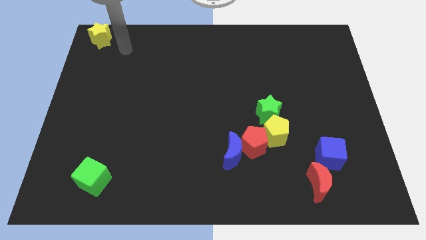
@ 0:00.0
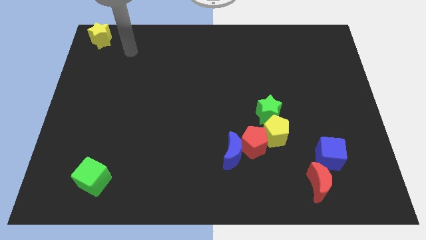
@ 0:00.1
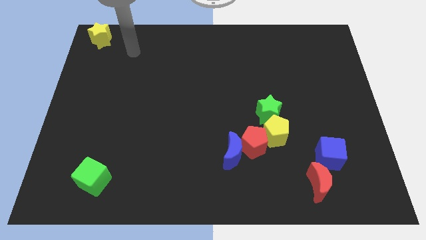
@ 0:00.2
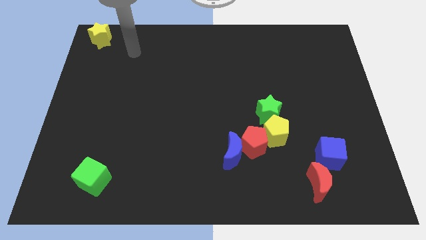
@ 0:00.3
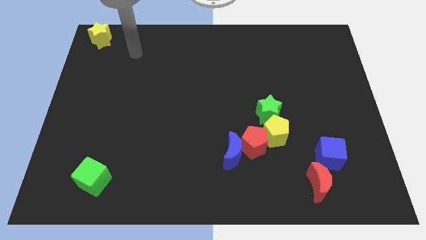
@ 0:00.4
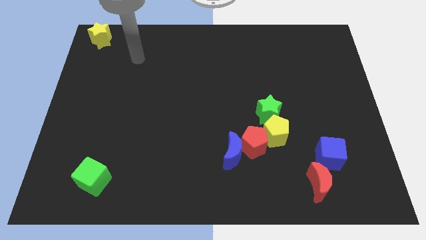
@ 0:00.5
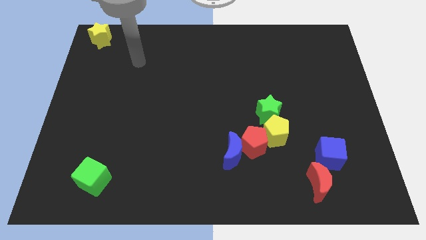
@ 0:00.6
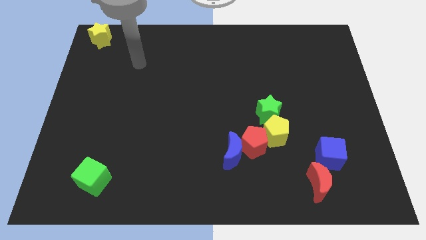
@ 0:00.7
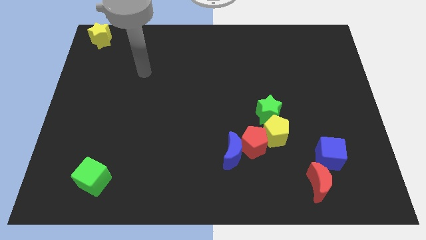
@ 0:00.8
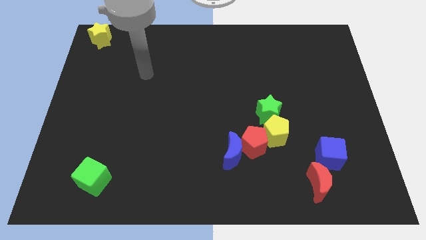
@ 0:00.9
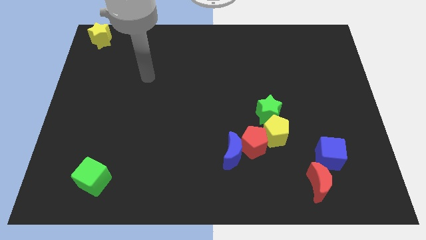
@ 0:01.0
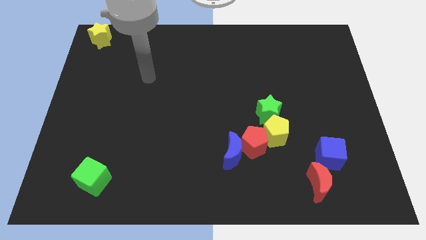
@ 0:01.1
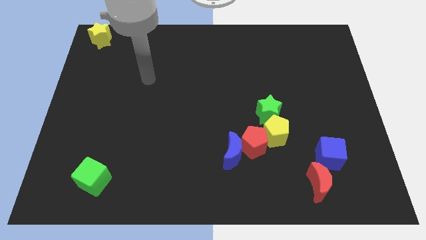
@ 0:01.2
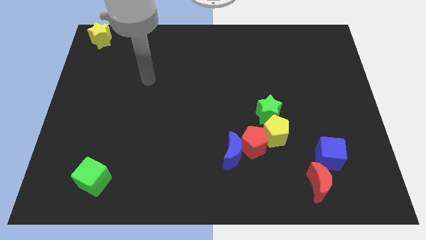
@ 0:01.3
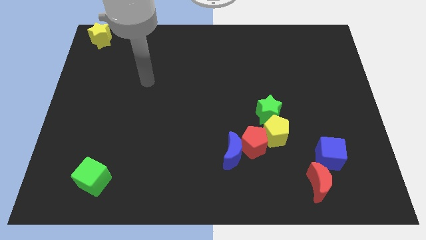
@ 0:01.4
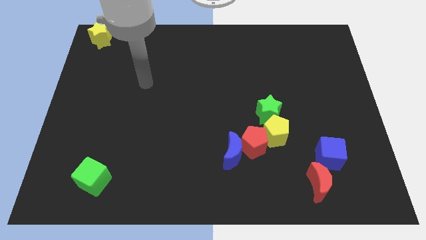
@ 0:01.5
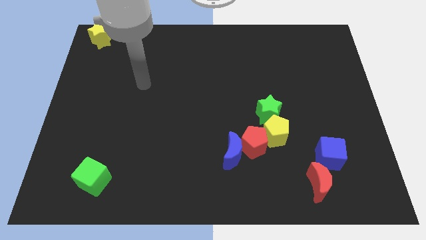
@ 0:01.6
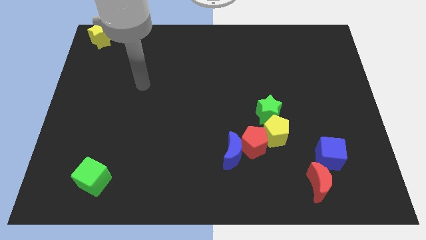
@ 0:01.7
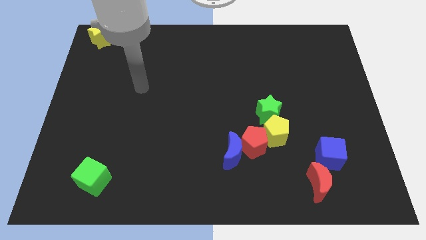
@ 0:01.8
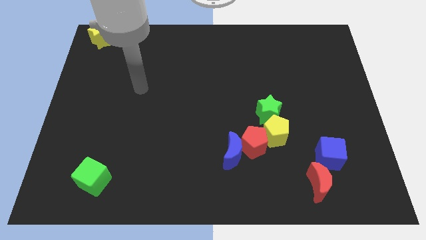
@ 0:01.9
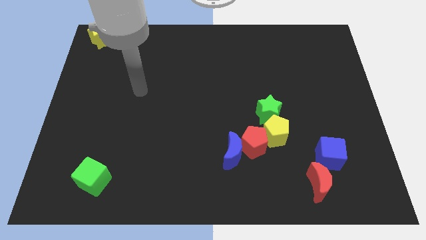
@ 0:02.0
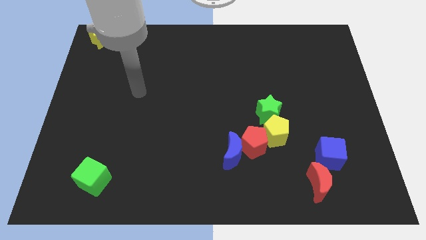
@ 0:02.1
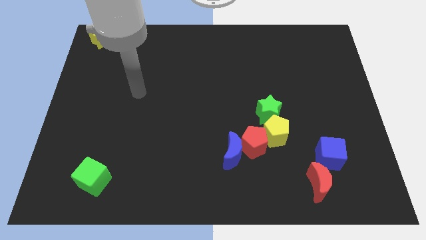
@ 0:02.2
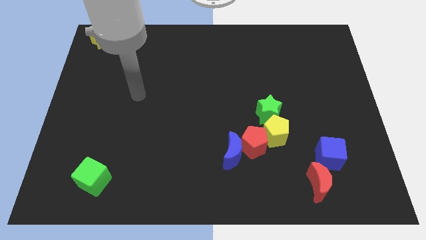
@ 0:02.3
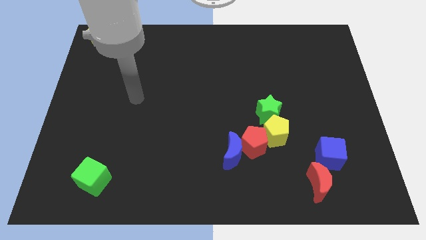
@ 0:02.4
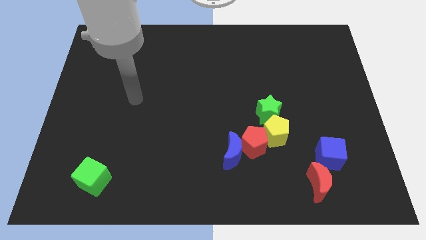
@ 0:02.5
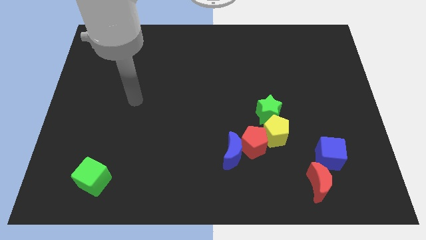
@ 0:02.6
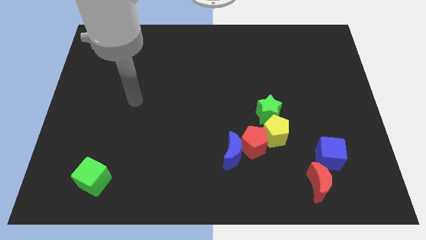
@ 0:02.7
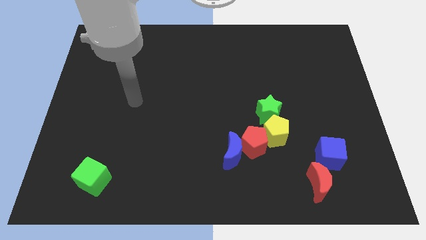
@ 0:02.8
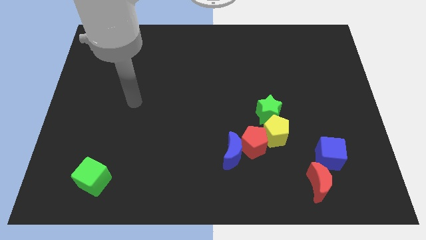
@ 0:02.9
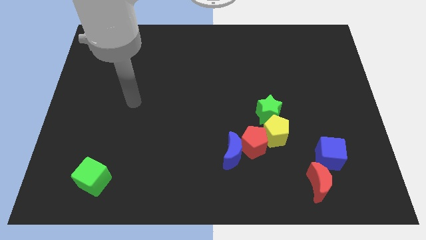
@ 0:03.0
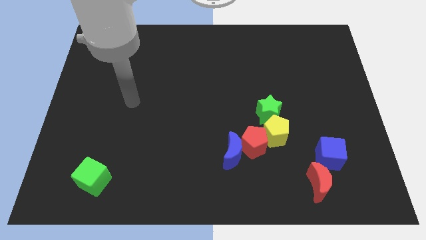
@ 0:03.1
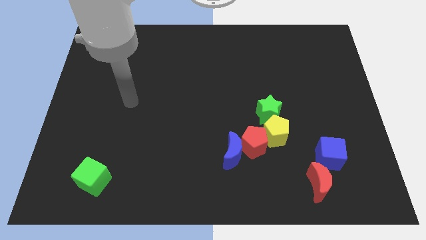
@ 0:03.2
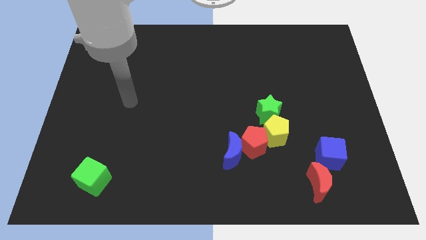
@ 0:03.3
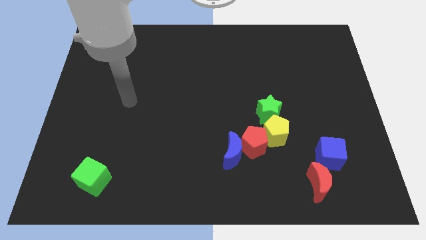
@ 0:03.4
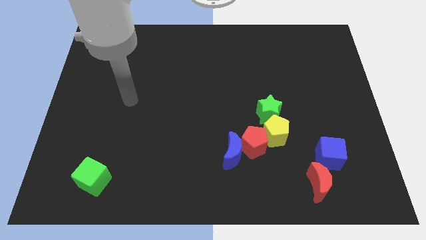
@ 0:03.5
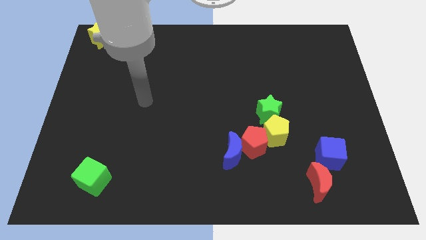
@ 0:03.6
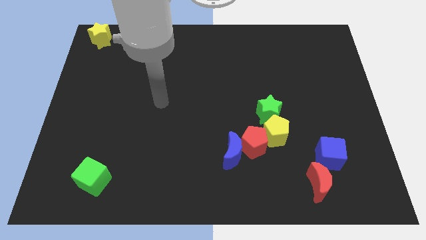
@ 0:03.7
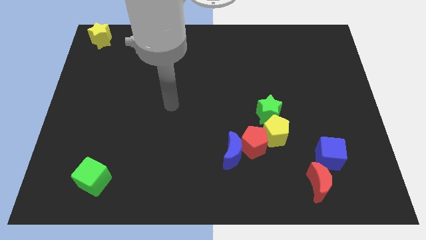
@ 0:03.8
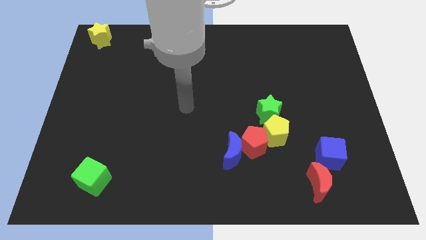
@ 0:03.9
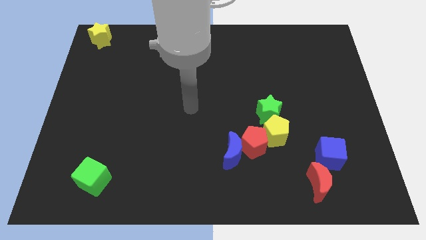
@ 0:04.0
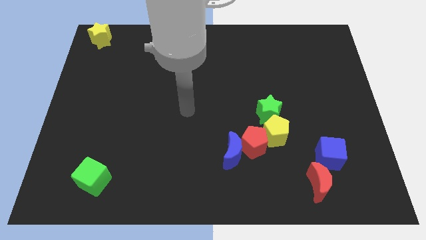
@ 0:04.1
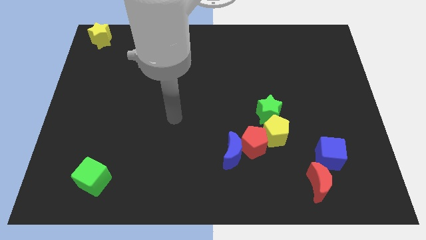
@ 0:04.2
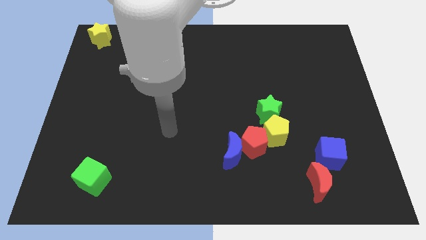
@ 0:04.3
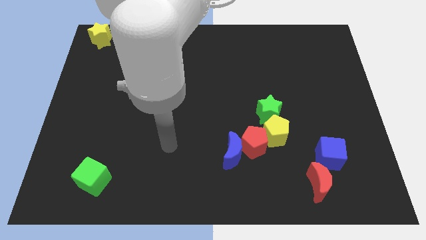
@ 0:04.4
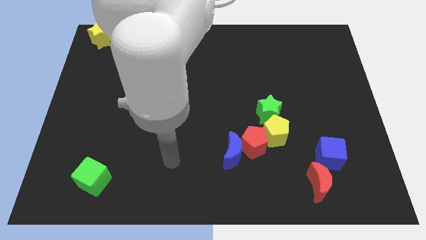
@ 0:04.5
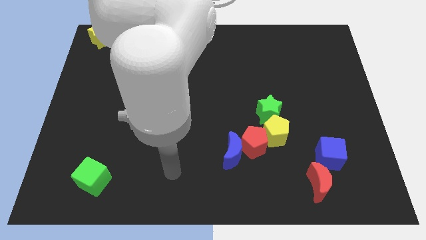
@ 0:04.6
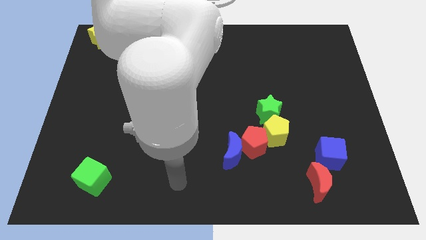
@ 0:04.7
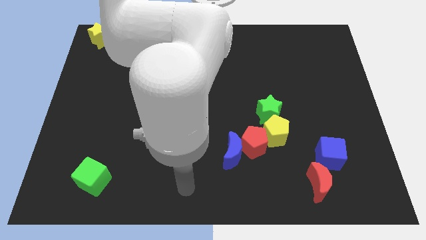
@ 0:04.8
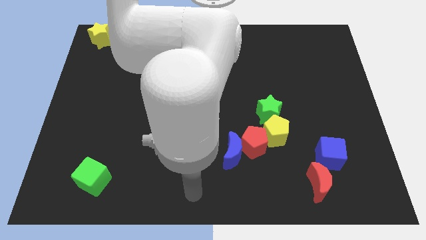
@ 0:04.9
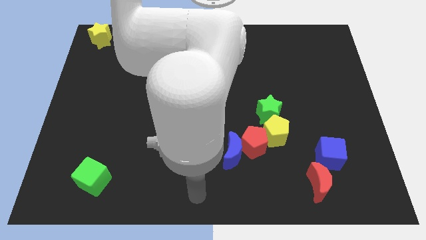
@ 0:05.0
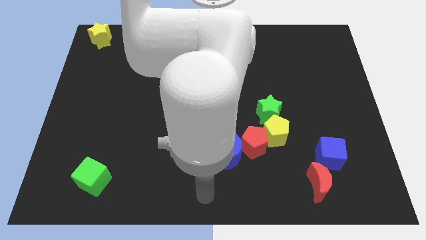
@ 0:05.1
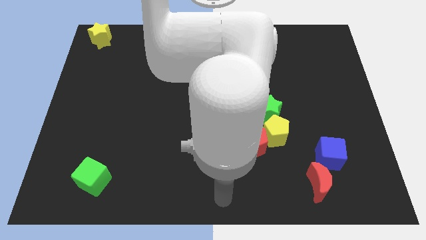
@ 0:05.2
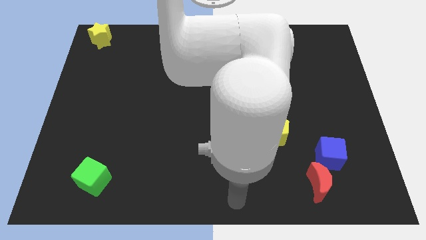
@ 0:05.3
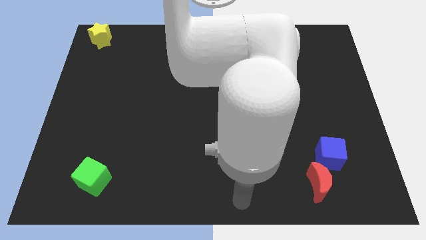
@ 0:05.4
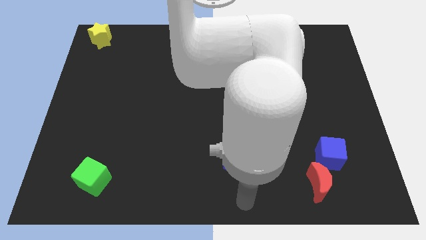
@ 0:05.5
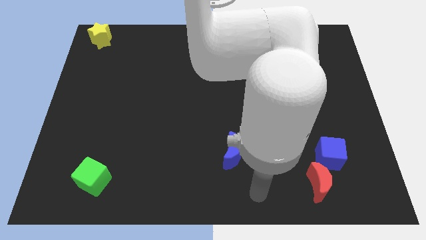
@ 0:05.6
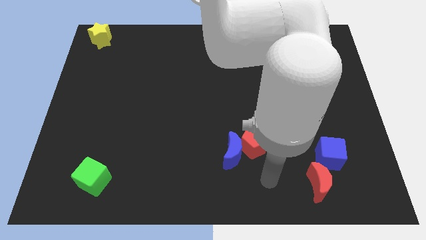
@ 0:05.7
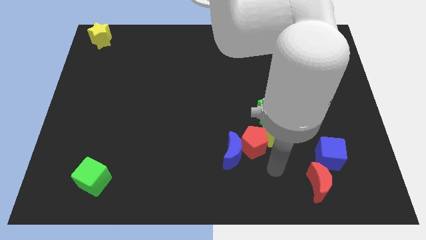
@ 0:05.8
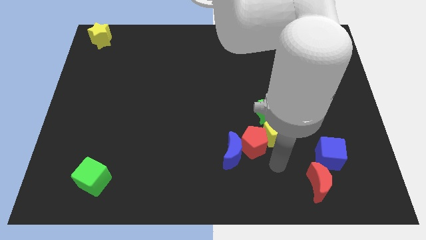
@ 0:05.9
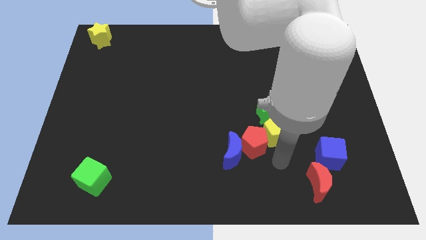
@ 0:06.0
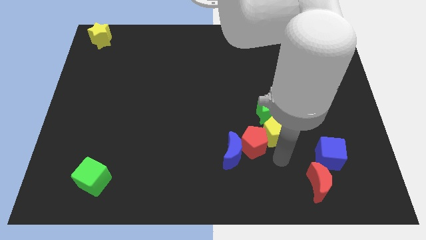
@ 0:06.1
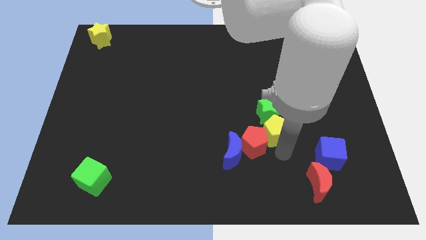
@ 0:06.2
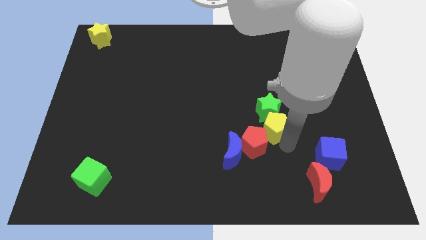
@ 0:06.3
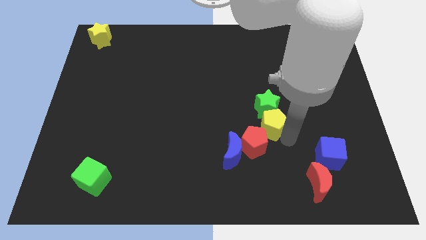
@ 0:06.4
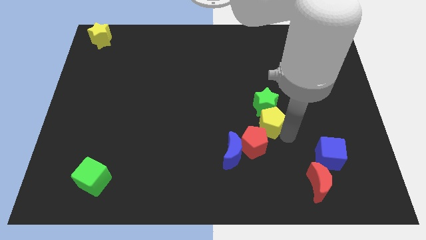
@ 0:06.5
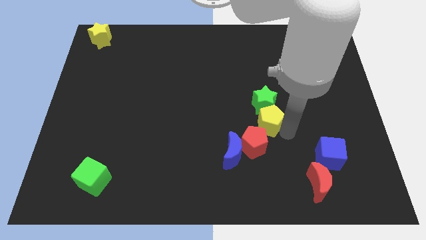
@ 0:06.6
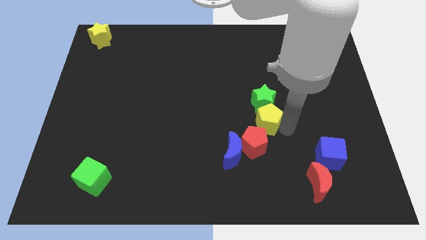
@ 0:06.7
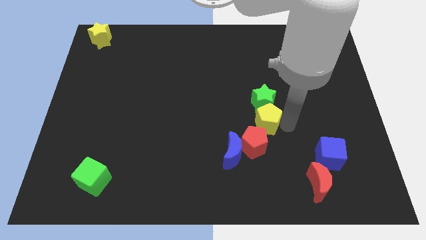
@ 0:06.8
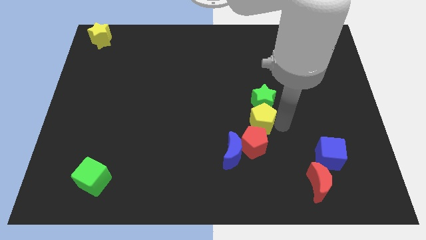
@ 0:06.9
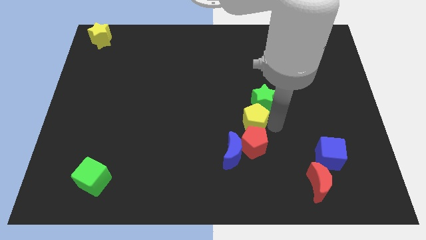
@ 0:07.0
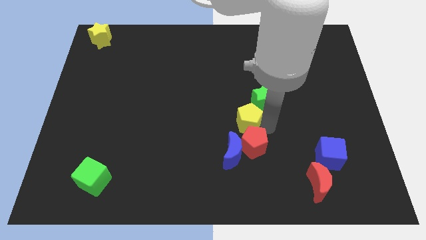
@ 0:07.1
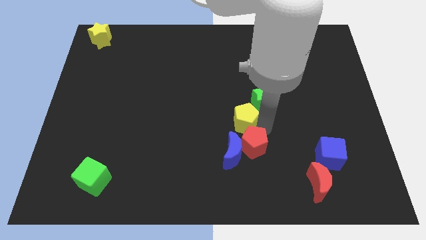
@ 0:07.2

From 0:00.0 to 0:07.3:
push the yellow pentagon to the top of the red pentagon

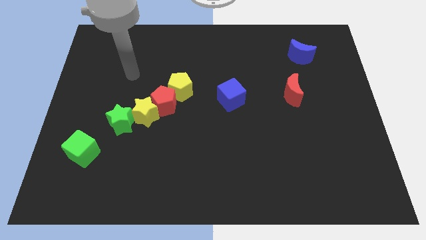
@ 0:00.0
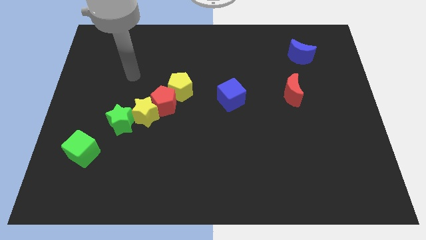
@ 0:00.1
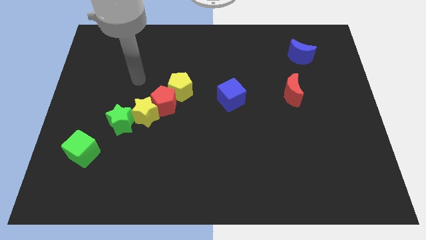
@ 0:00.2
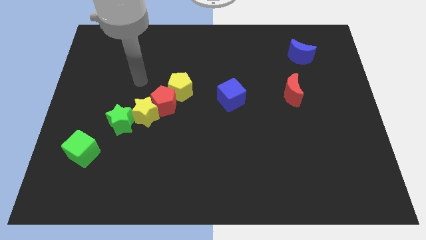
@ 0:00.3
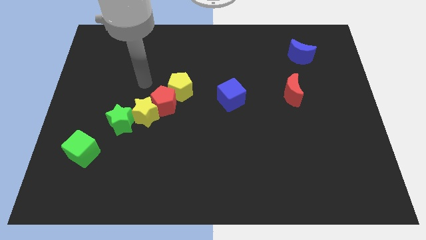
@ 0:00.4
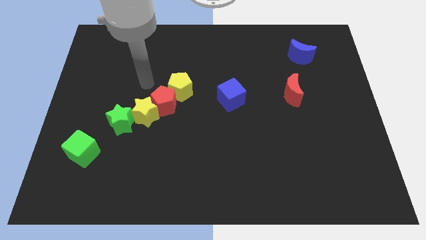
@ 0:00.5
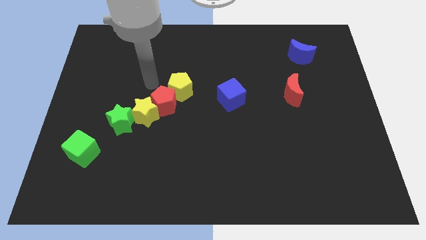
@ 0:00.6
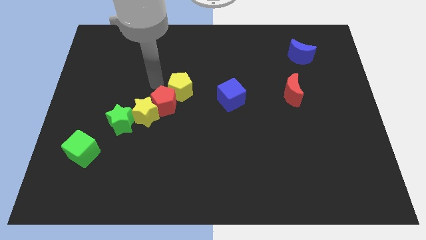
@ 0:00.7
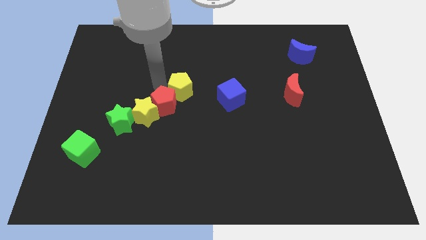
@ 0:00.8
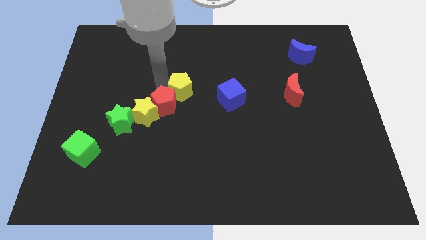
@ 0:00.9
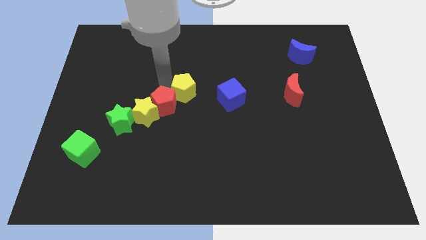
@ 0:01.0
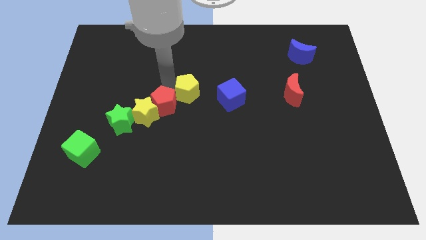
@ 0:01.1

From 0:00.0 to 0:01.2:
move the yellow pentagon slightly away from the red pentagon

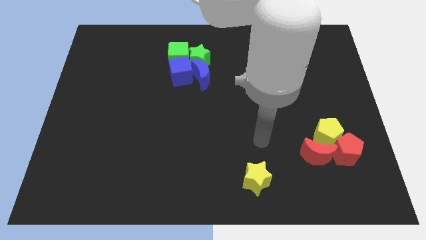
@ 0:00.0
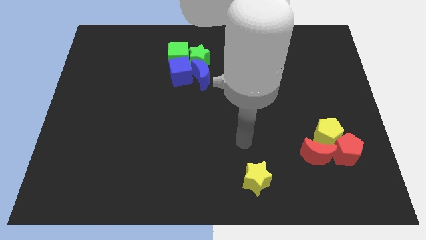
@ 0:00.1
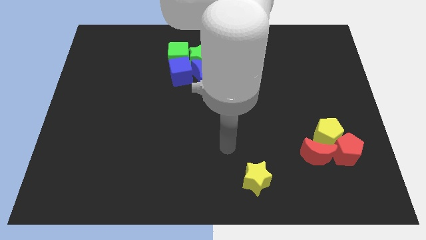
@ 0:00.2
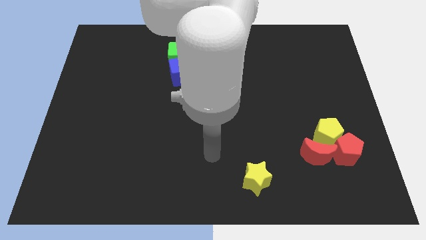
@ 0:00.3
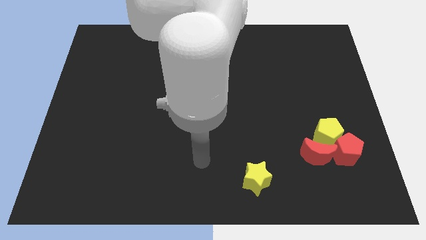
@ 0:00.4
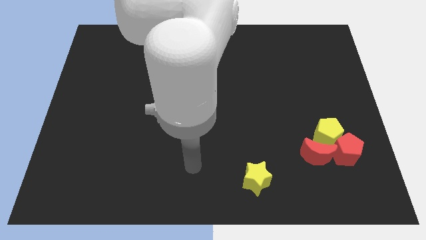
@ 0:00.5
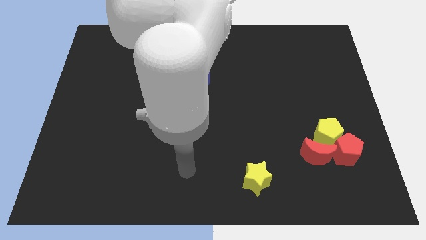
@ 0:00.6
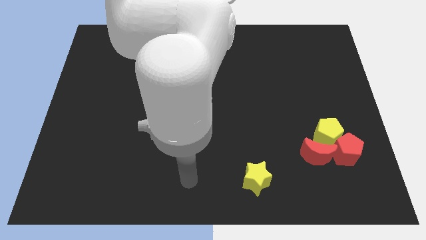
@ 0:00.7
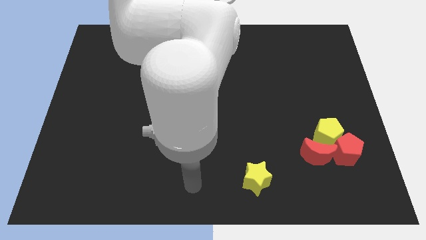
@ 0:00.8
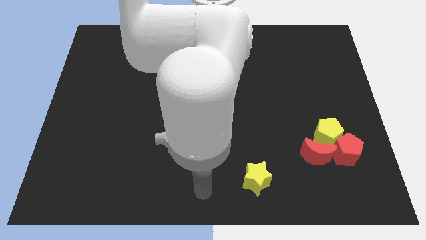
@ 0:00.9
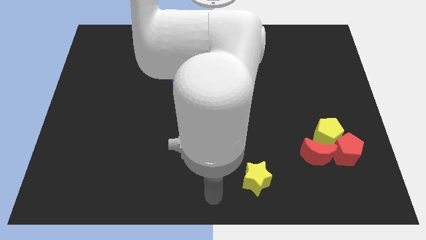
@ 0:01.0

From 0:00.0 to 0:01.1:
take your hand to the bottom center of the board
